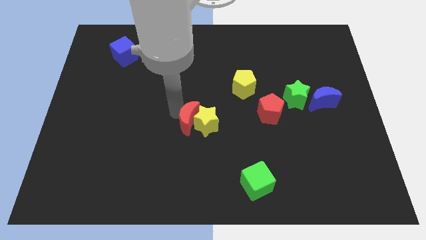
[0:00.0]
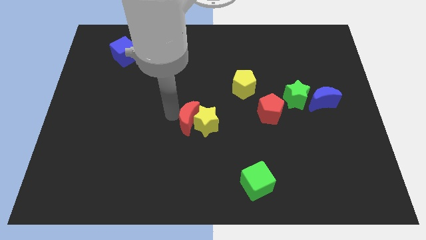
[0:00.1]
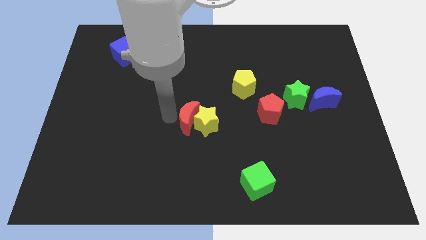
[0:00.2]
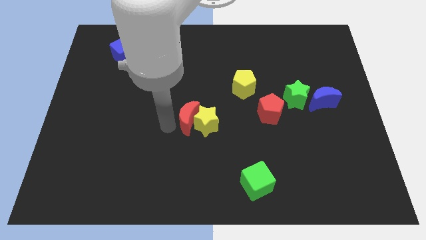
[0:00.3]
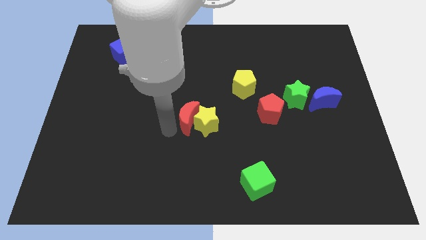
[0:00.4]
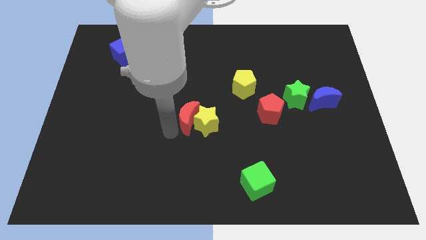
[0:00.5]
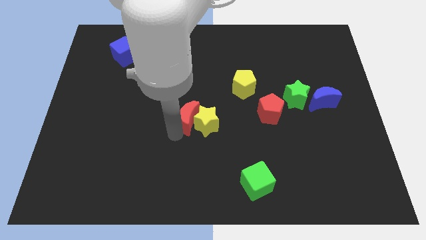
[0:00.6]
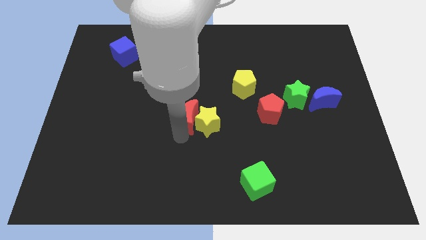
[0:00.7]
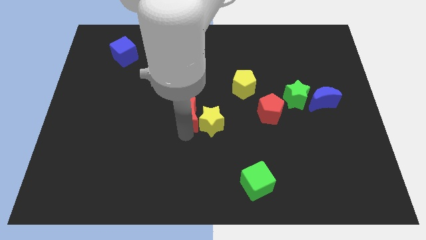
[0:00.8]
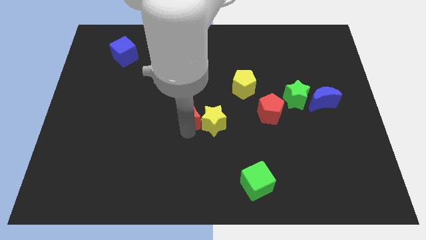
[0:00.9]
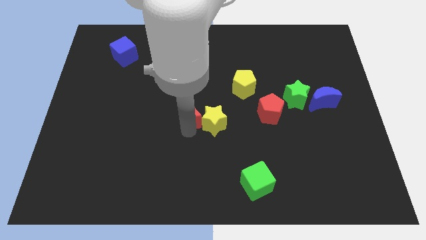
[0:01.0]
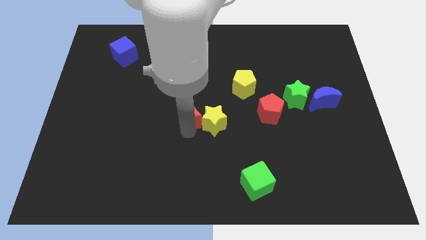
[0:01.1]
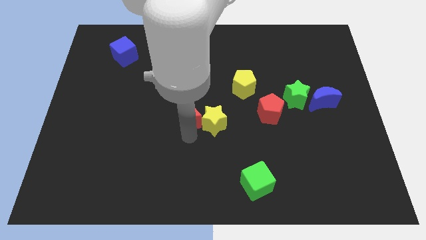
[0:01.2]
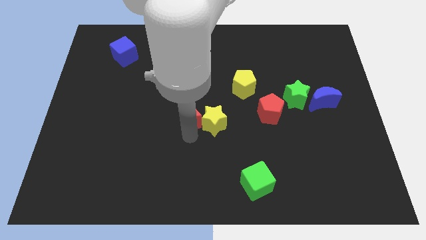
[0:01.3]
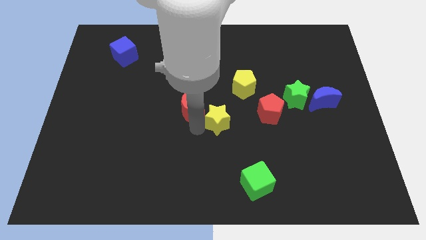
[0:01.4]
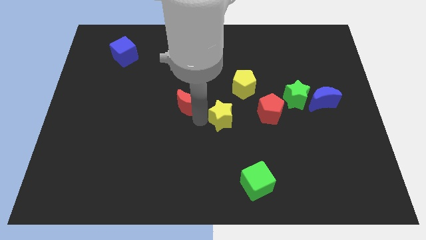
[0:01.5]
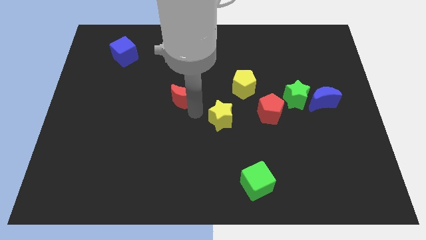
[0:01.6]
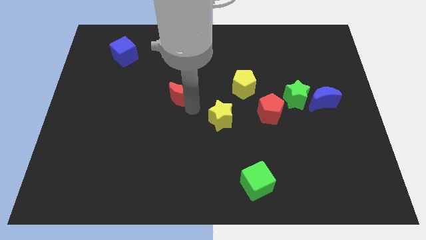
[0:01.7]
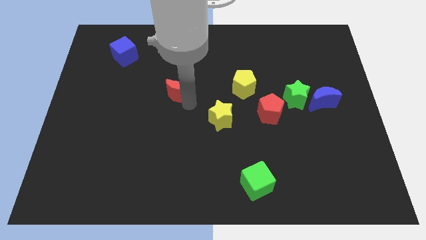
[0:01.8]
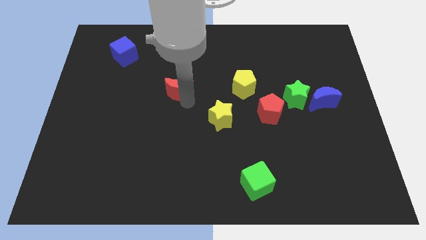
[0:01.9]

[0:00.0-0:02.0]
separate red moon from the yellow star

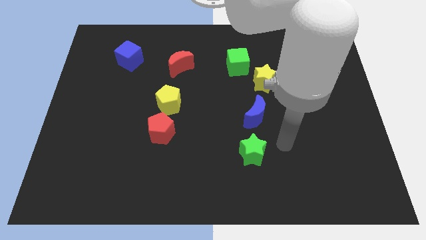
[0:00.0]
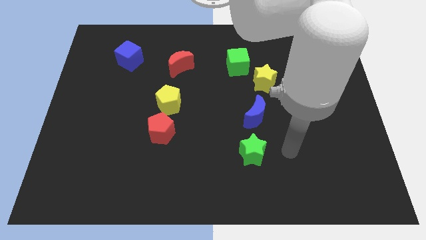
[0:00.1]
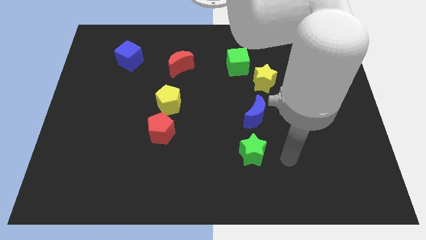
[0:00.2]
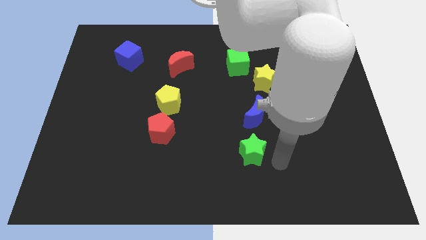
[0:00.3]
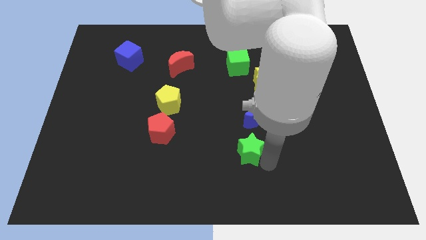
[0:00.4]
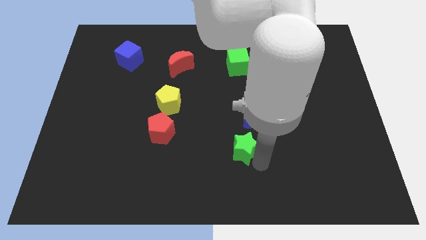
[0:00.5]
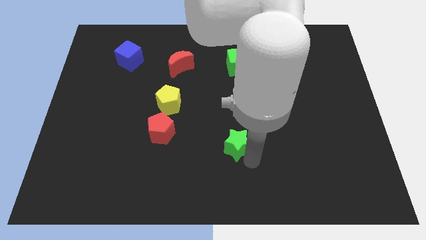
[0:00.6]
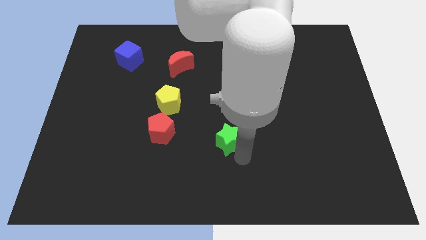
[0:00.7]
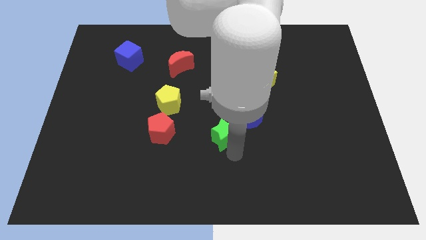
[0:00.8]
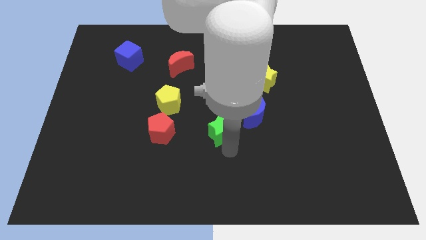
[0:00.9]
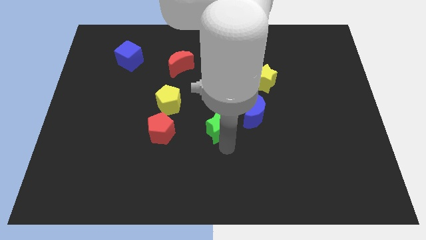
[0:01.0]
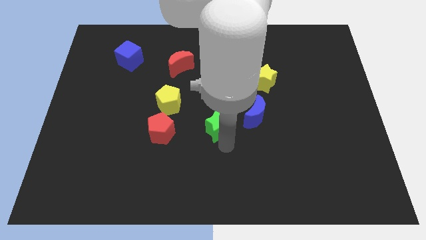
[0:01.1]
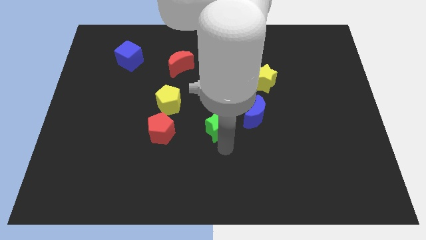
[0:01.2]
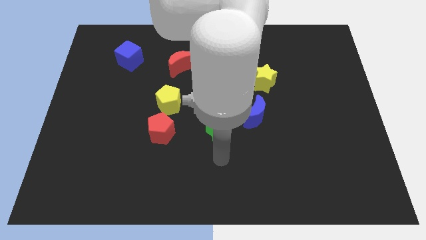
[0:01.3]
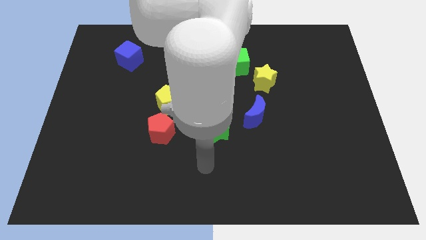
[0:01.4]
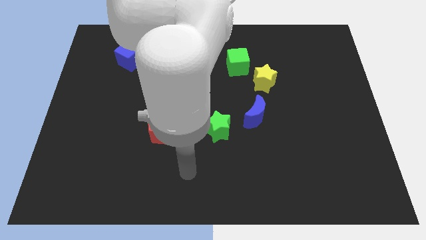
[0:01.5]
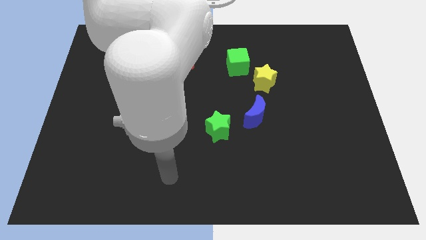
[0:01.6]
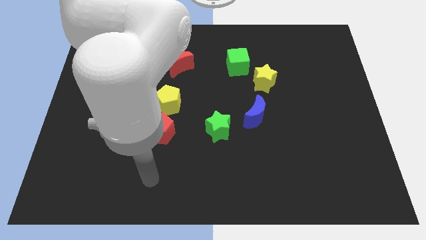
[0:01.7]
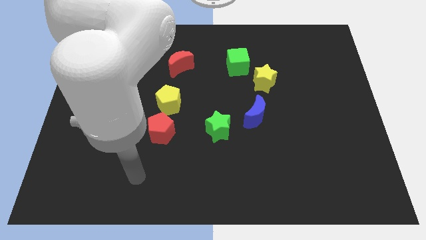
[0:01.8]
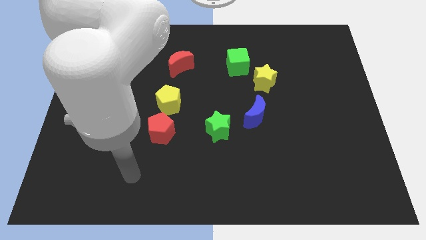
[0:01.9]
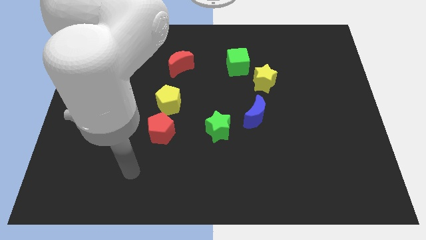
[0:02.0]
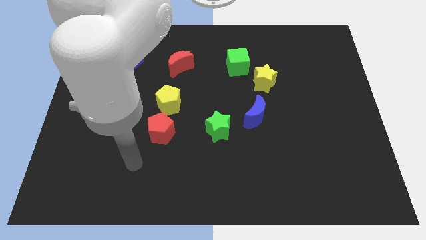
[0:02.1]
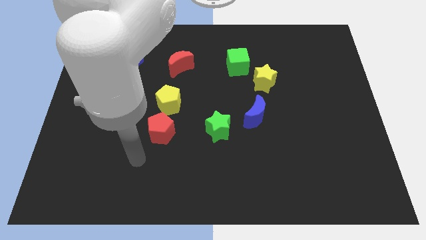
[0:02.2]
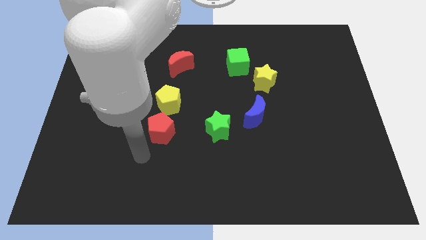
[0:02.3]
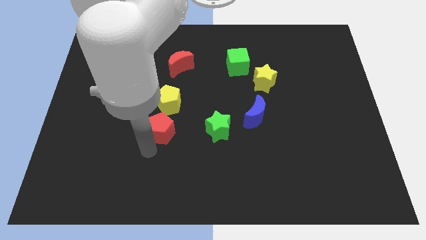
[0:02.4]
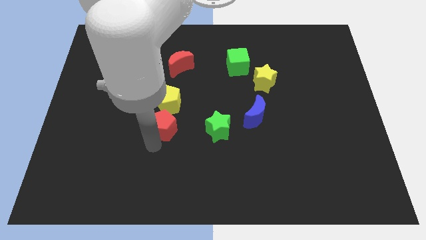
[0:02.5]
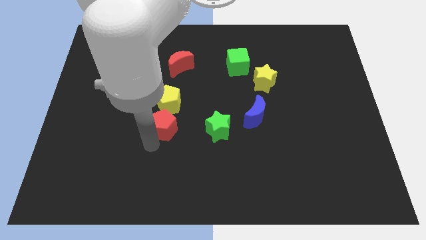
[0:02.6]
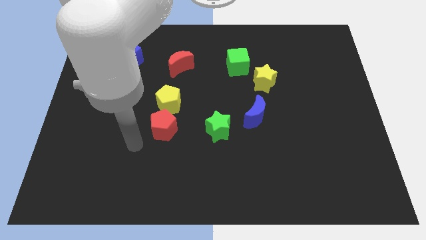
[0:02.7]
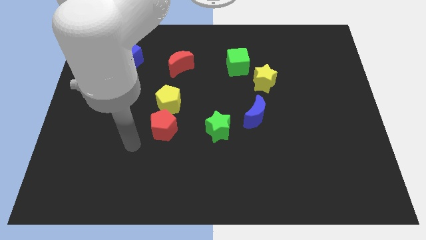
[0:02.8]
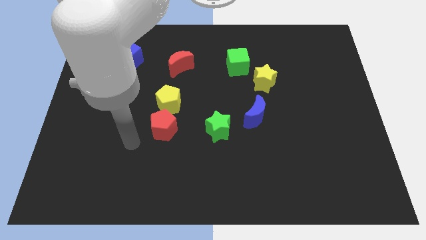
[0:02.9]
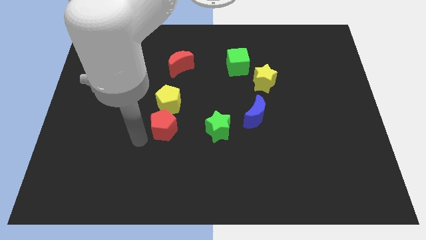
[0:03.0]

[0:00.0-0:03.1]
push the green star and the red pentagon upwards

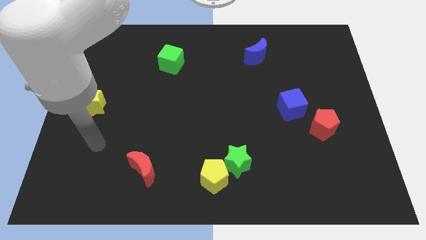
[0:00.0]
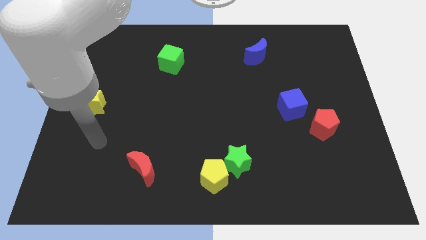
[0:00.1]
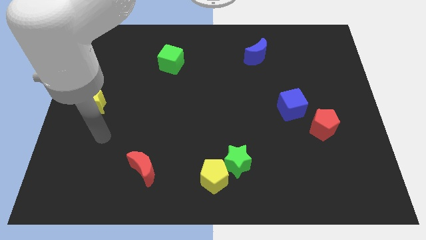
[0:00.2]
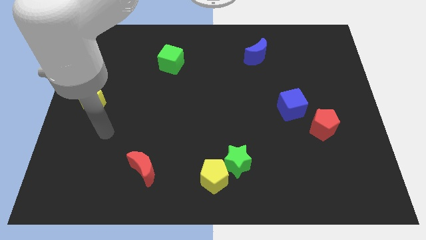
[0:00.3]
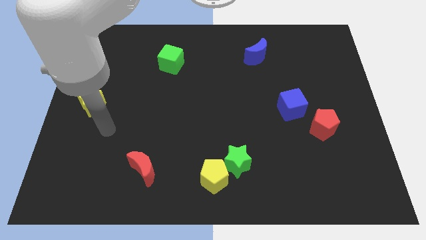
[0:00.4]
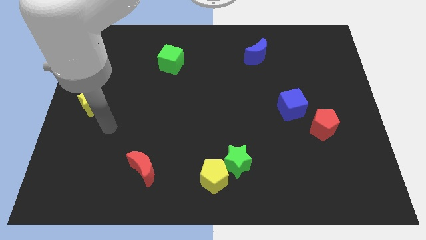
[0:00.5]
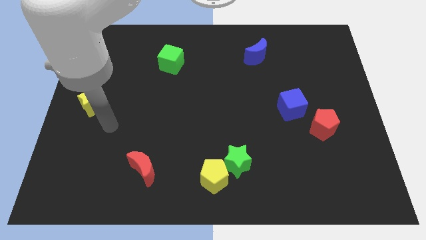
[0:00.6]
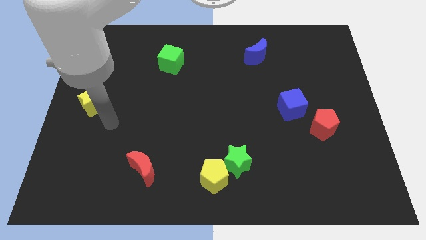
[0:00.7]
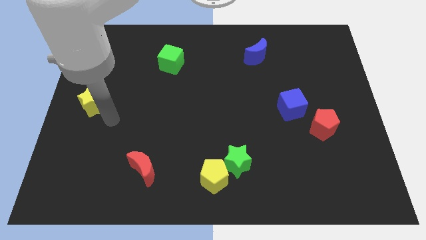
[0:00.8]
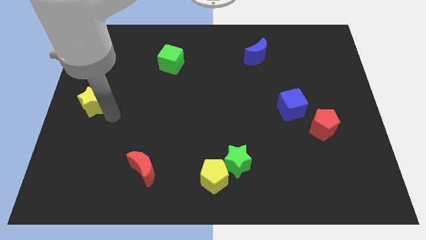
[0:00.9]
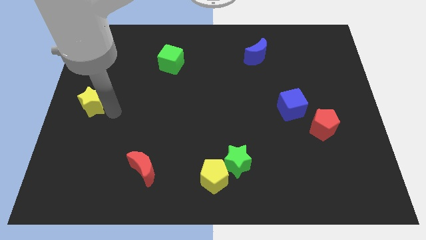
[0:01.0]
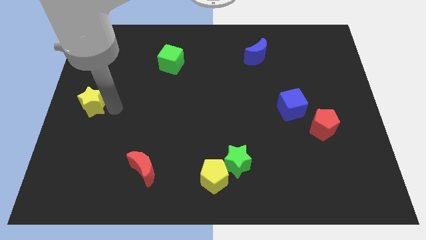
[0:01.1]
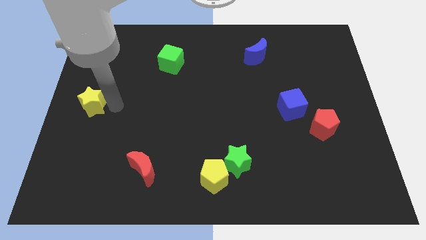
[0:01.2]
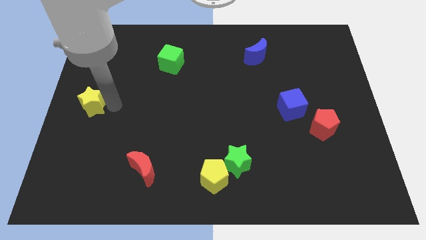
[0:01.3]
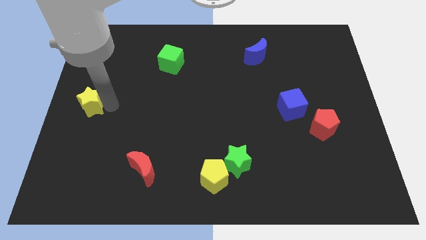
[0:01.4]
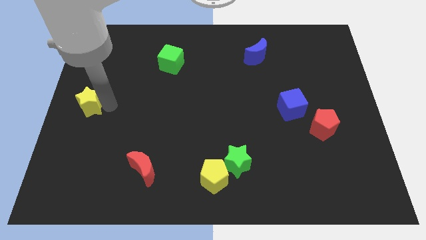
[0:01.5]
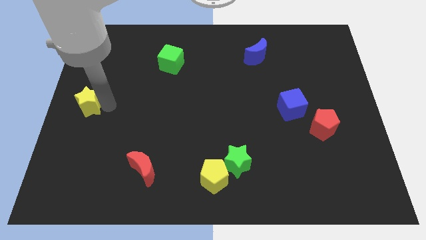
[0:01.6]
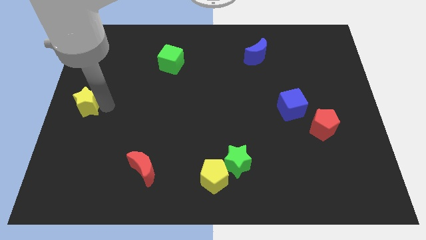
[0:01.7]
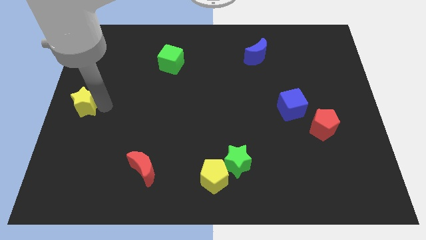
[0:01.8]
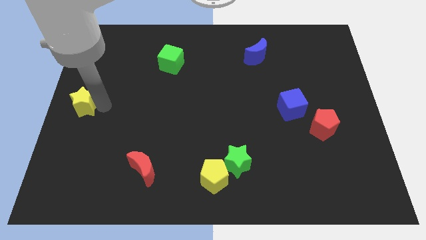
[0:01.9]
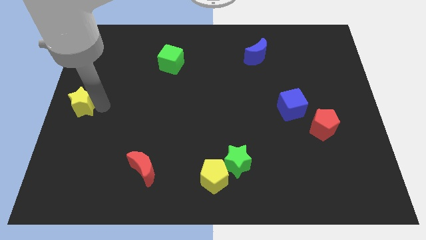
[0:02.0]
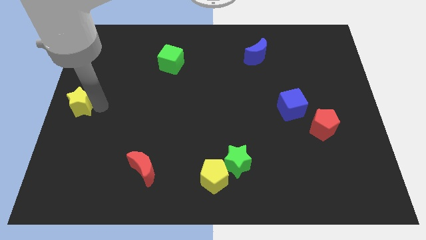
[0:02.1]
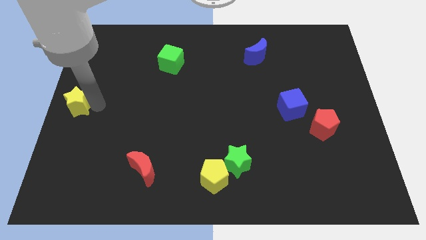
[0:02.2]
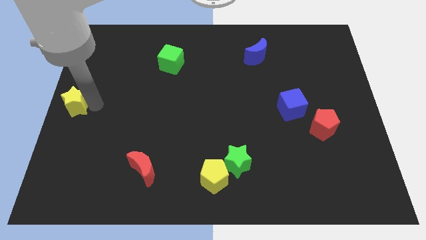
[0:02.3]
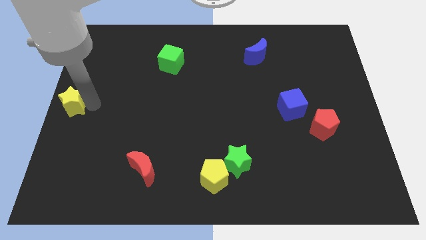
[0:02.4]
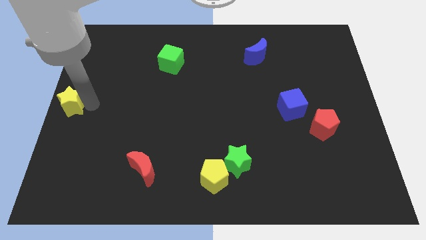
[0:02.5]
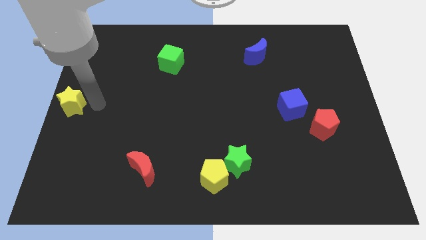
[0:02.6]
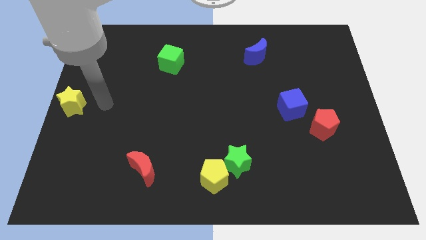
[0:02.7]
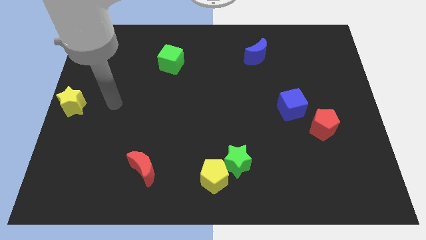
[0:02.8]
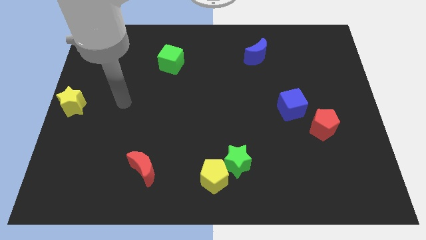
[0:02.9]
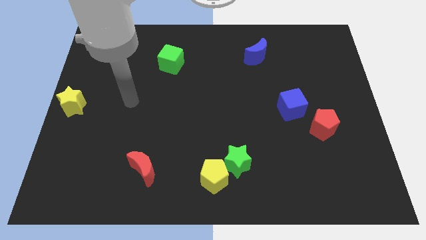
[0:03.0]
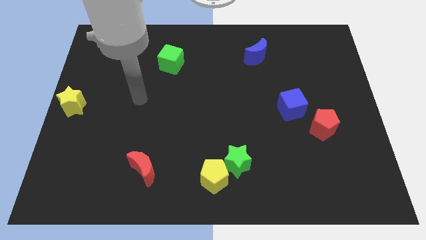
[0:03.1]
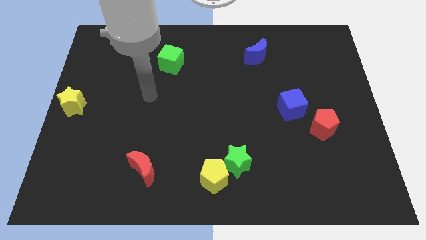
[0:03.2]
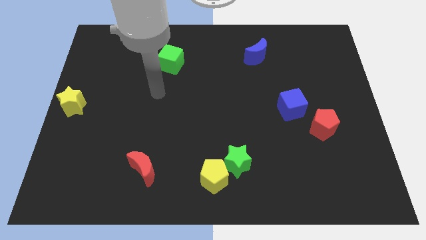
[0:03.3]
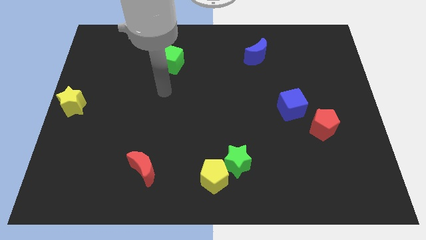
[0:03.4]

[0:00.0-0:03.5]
push the yellow star to the center left
